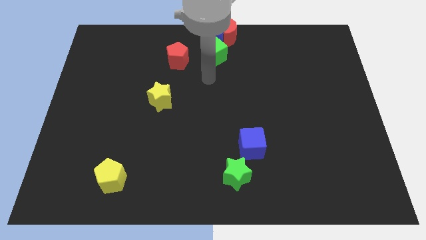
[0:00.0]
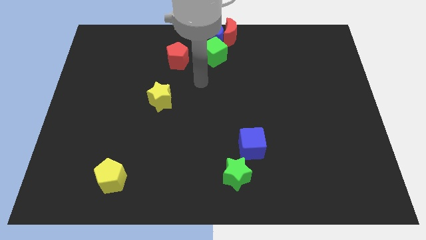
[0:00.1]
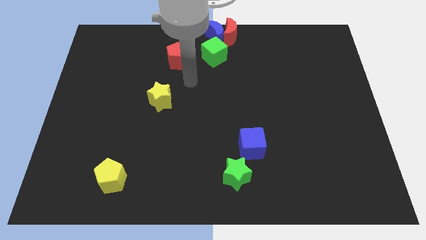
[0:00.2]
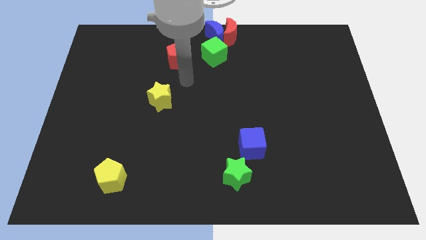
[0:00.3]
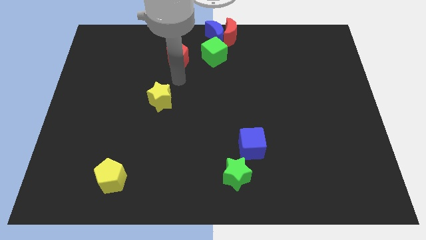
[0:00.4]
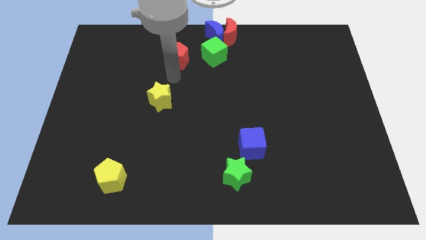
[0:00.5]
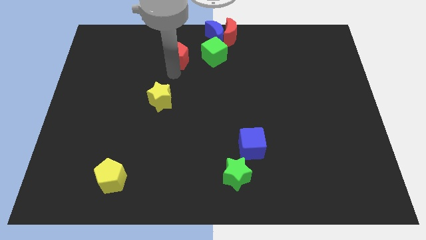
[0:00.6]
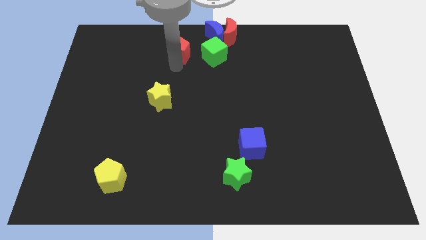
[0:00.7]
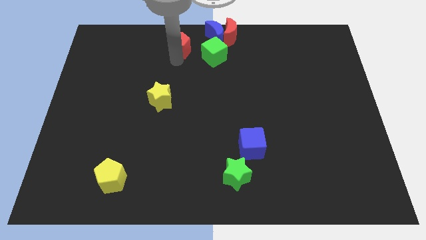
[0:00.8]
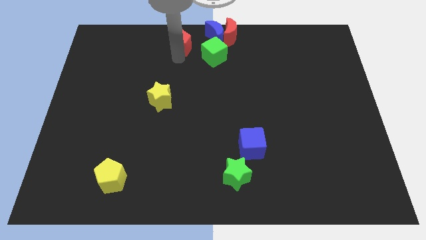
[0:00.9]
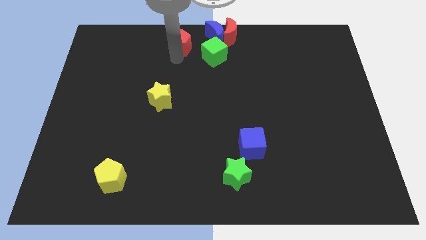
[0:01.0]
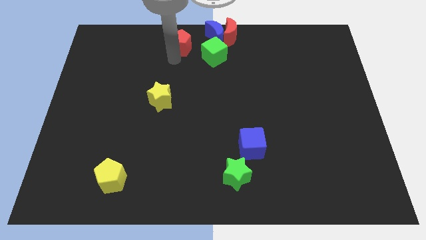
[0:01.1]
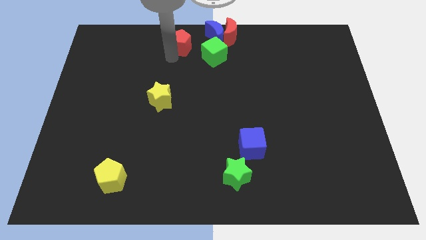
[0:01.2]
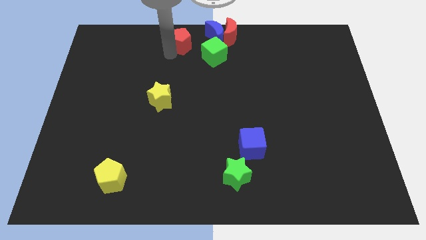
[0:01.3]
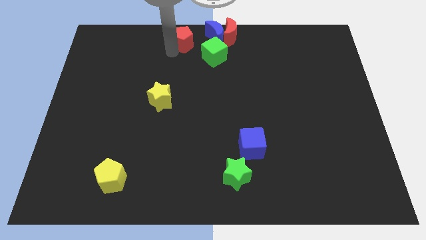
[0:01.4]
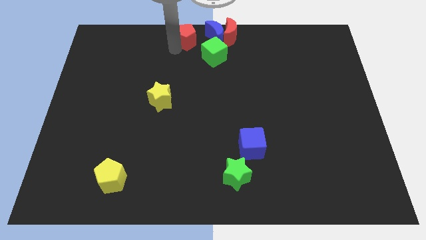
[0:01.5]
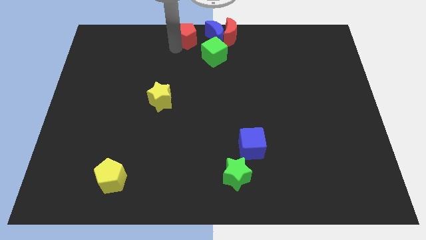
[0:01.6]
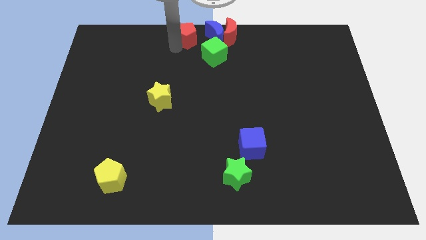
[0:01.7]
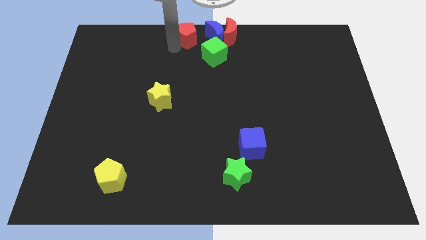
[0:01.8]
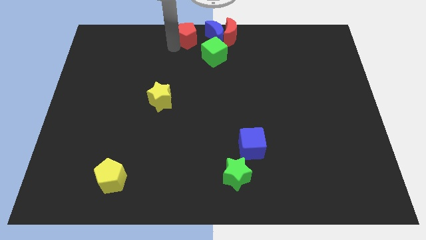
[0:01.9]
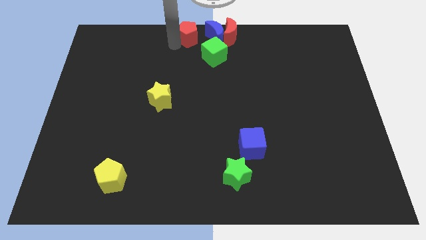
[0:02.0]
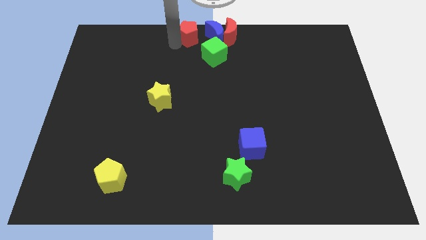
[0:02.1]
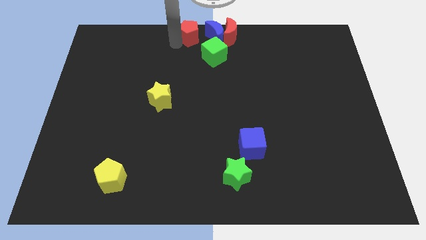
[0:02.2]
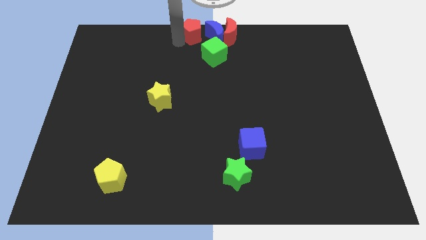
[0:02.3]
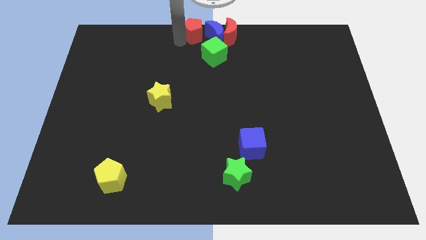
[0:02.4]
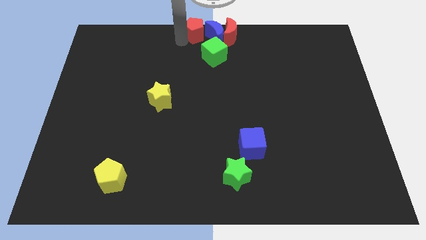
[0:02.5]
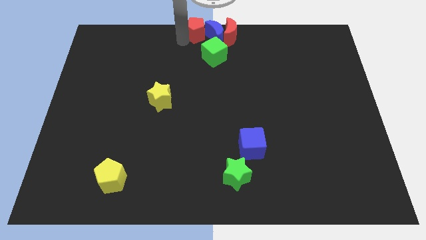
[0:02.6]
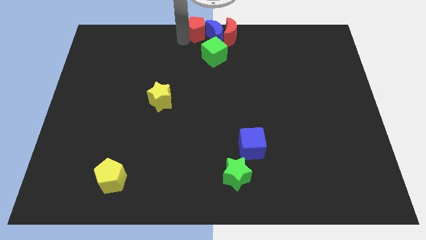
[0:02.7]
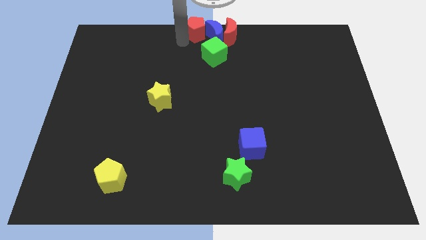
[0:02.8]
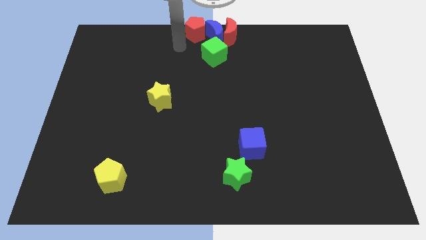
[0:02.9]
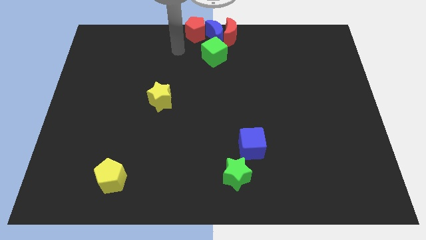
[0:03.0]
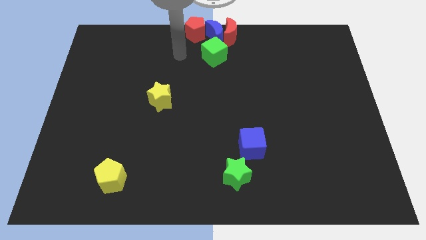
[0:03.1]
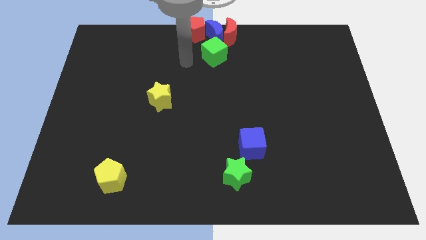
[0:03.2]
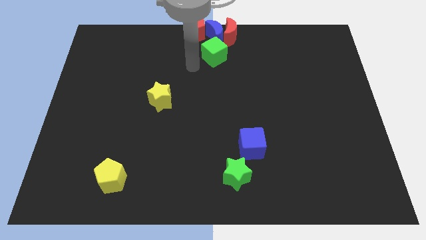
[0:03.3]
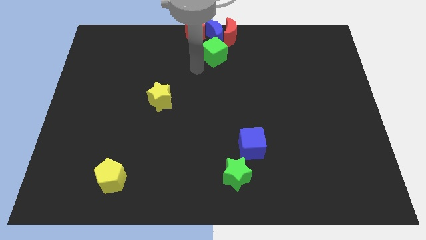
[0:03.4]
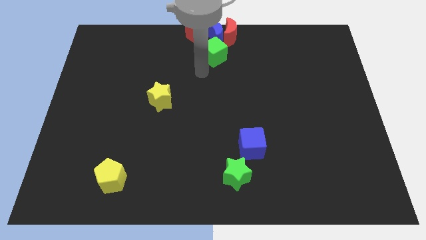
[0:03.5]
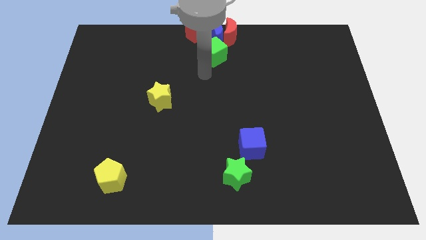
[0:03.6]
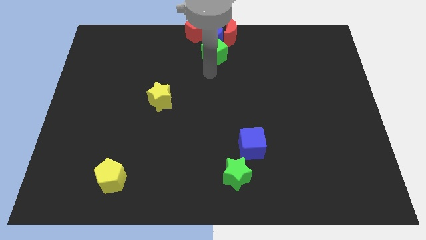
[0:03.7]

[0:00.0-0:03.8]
place the red pentagon left to the blue crescent

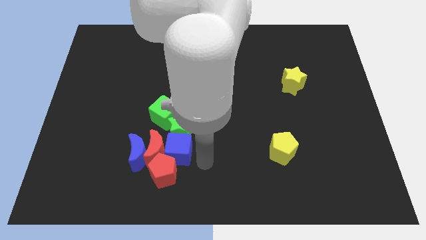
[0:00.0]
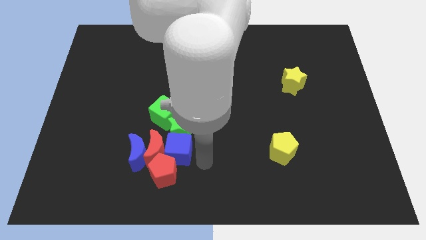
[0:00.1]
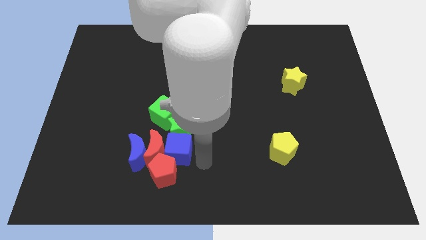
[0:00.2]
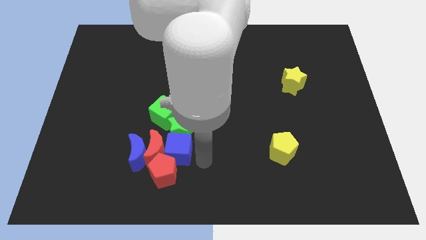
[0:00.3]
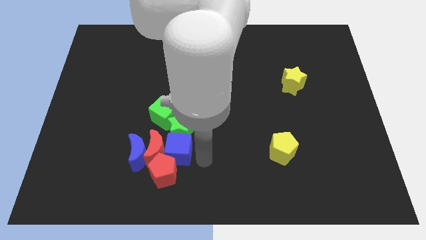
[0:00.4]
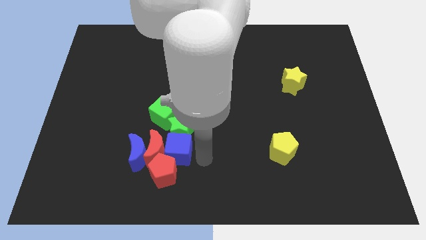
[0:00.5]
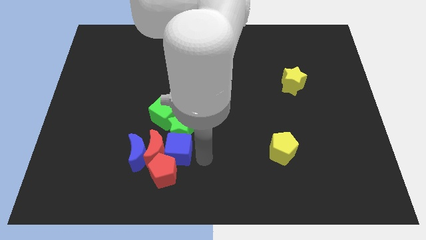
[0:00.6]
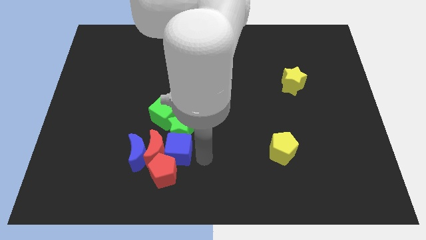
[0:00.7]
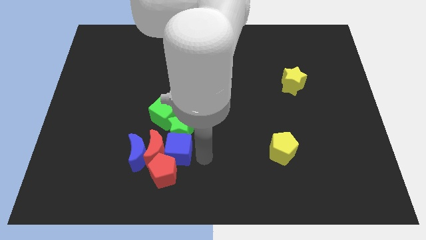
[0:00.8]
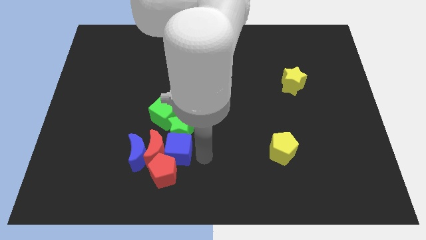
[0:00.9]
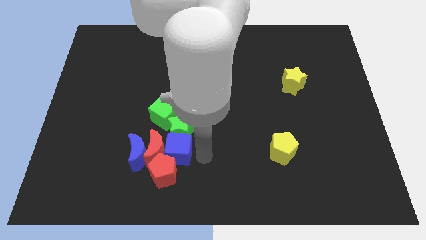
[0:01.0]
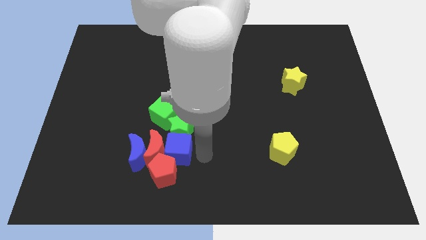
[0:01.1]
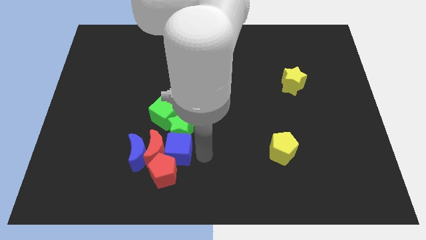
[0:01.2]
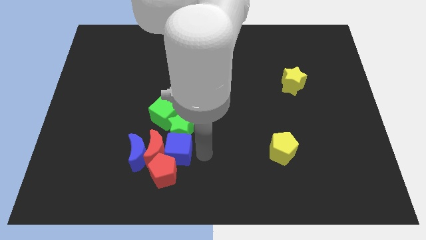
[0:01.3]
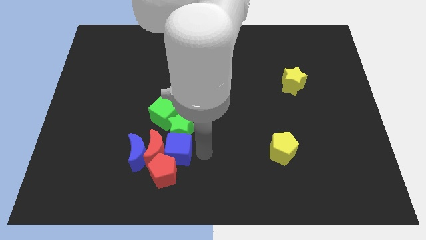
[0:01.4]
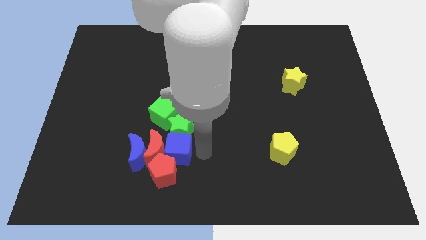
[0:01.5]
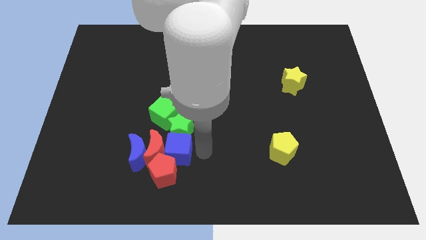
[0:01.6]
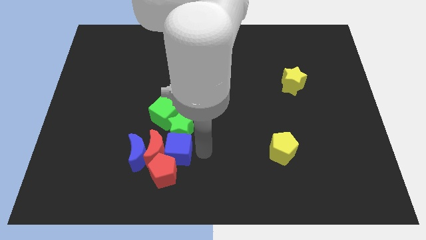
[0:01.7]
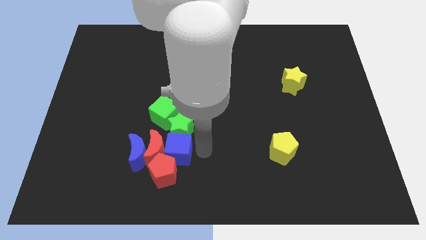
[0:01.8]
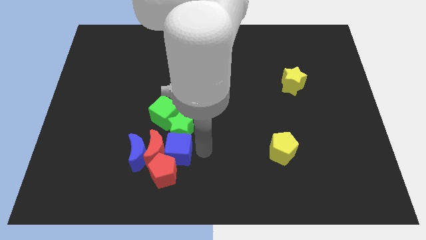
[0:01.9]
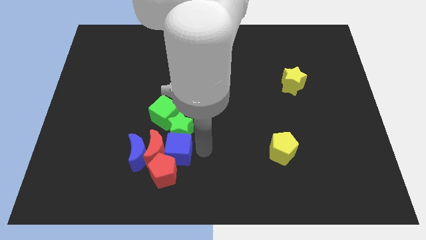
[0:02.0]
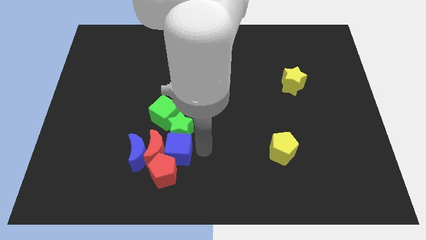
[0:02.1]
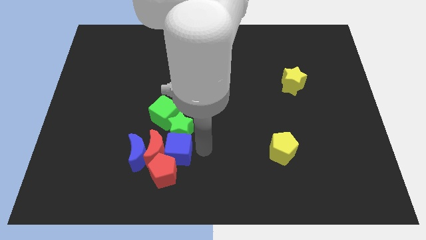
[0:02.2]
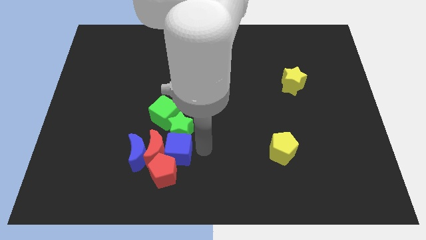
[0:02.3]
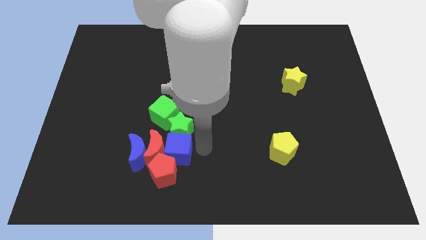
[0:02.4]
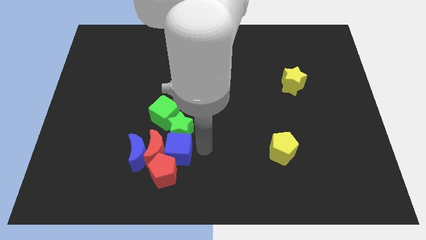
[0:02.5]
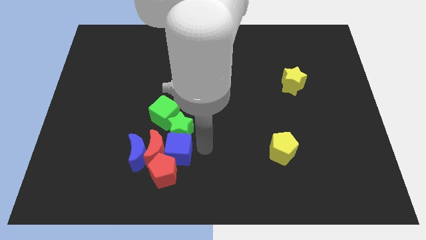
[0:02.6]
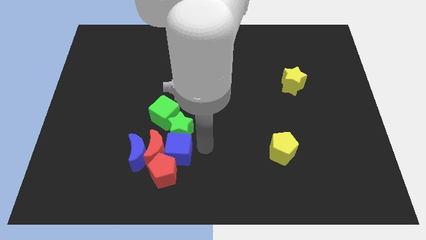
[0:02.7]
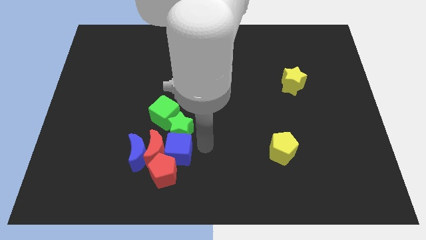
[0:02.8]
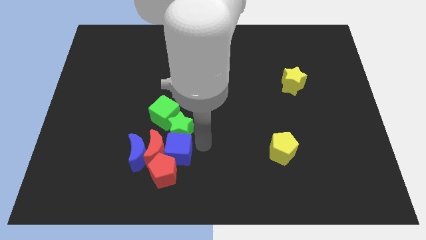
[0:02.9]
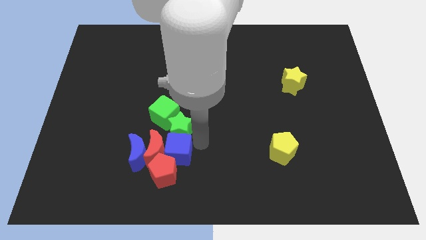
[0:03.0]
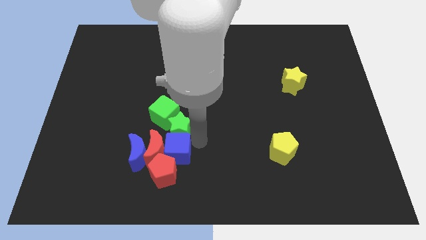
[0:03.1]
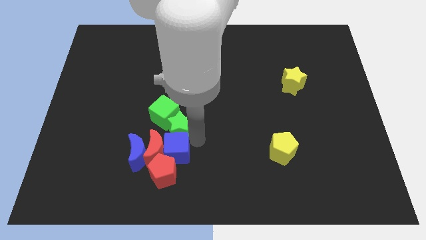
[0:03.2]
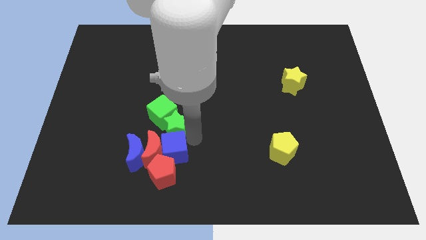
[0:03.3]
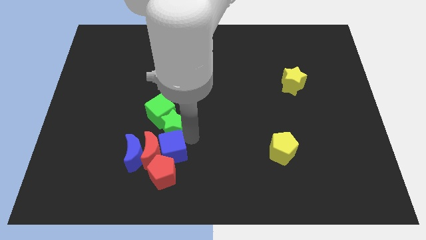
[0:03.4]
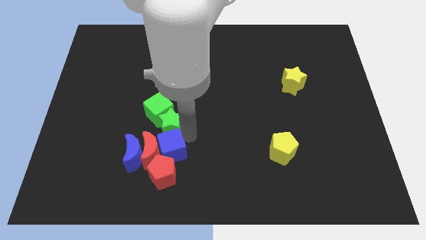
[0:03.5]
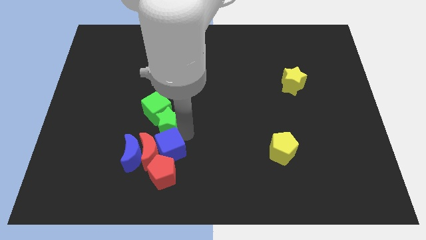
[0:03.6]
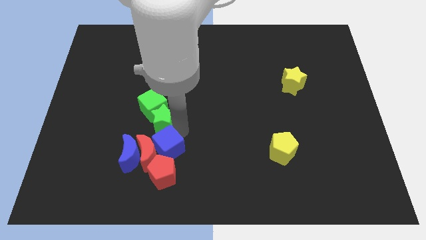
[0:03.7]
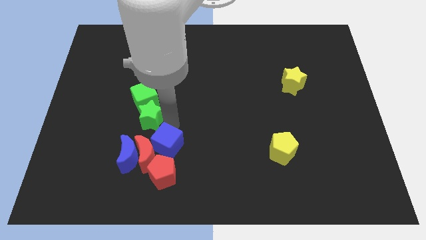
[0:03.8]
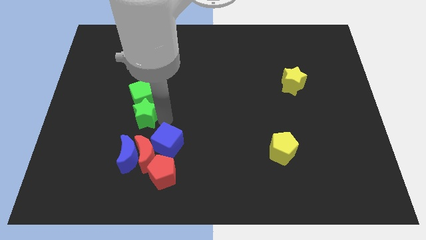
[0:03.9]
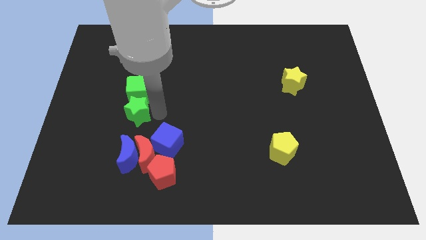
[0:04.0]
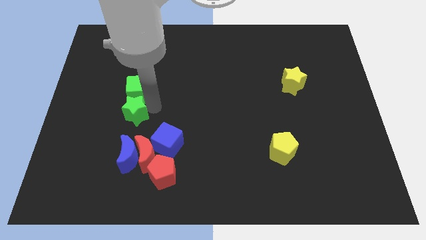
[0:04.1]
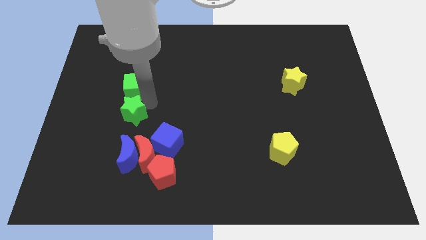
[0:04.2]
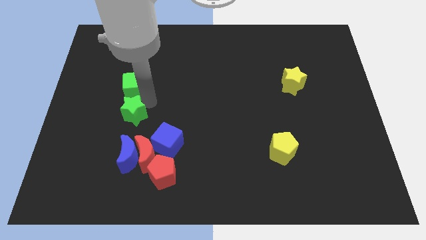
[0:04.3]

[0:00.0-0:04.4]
slightly push the green blocks to center left

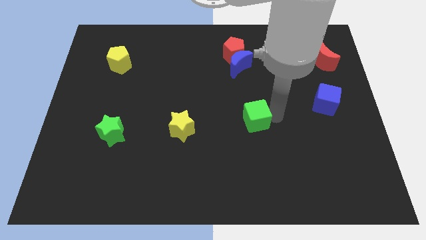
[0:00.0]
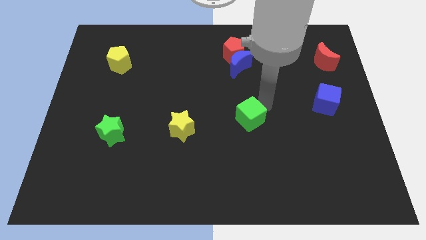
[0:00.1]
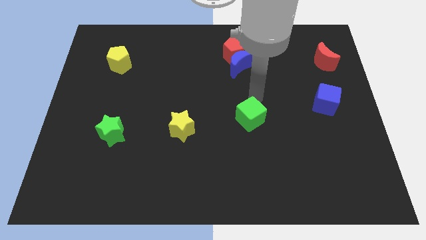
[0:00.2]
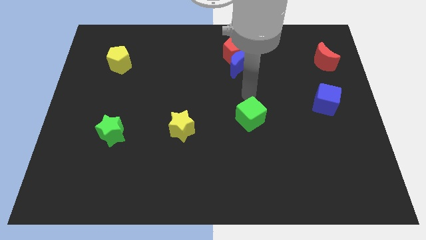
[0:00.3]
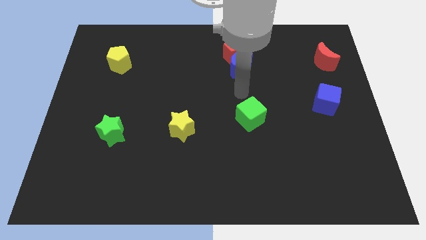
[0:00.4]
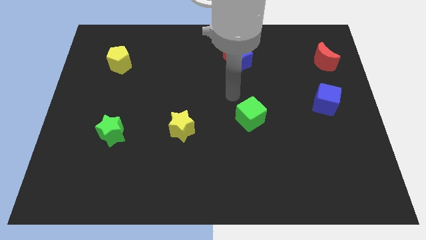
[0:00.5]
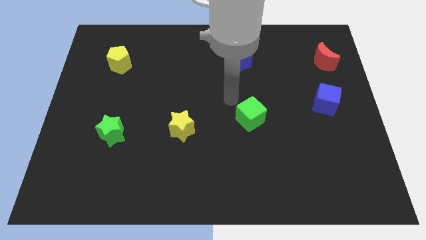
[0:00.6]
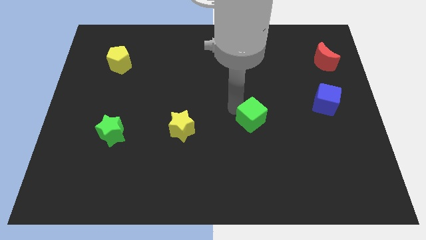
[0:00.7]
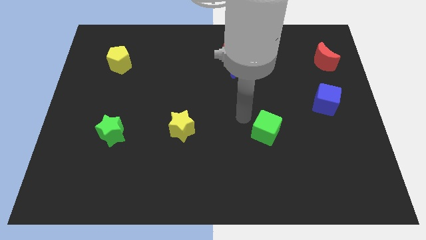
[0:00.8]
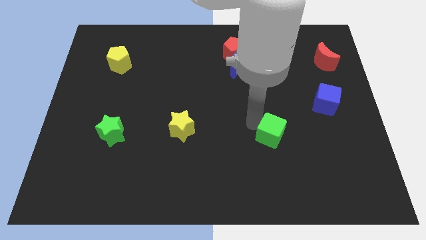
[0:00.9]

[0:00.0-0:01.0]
touch the green cube
